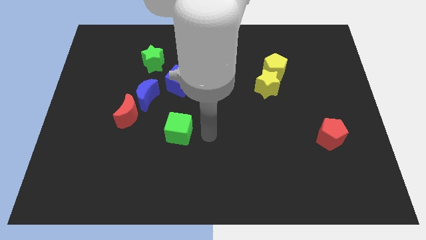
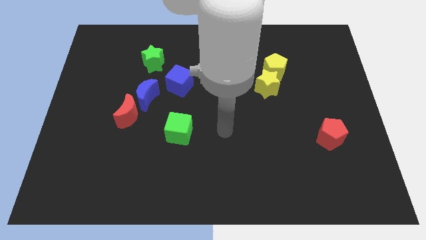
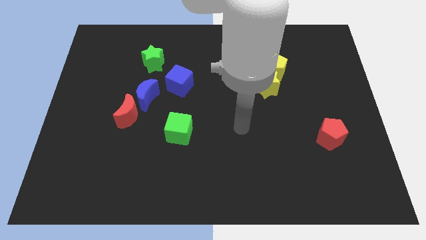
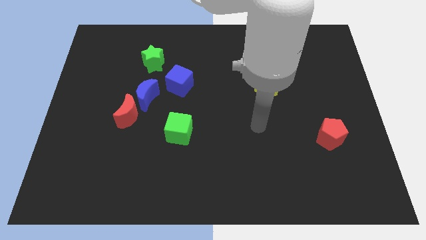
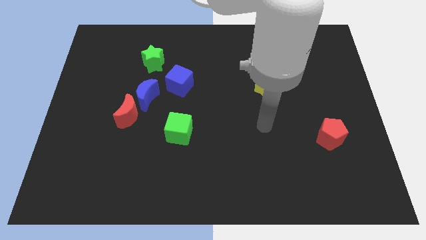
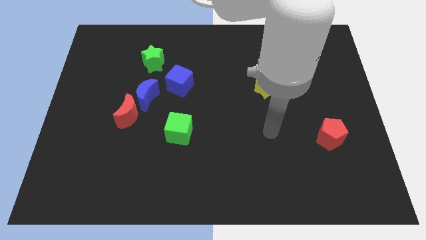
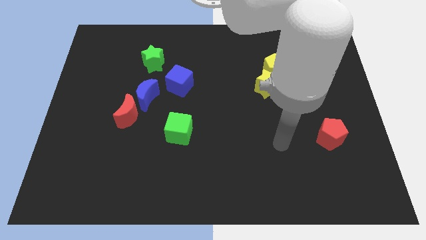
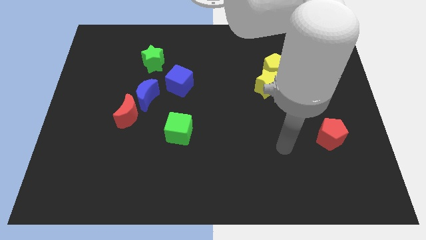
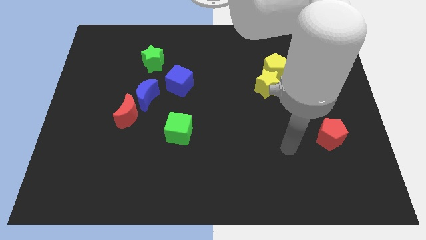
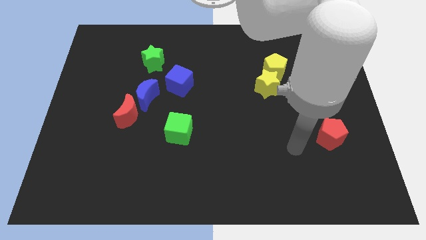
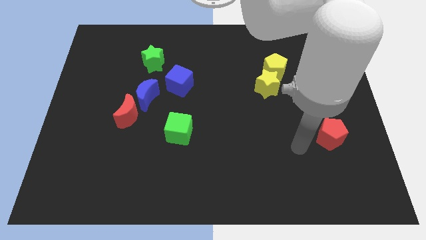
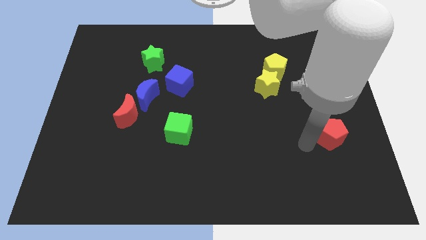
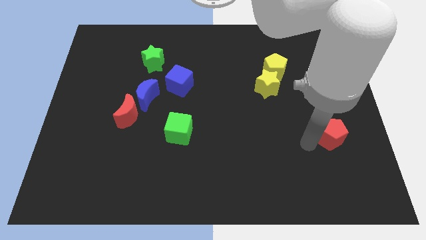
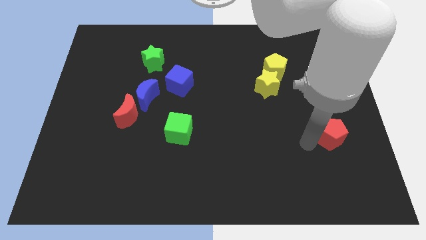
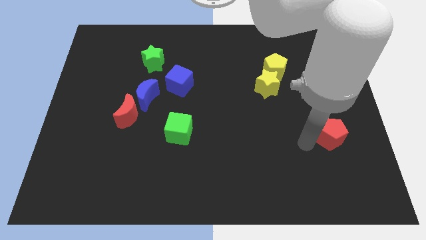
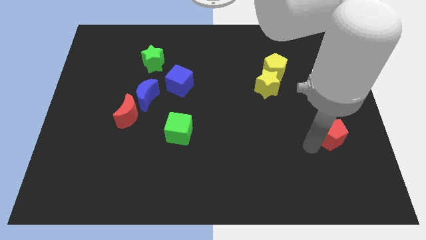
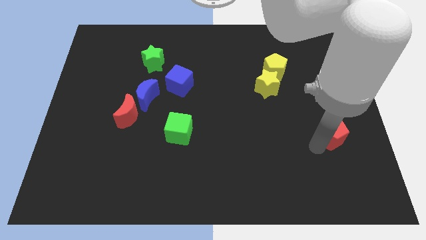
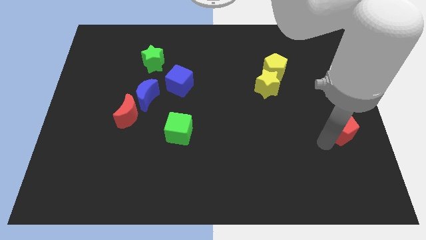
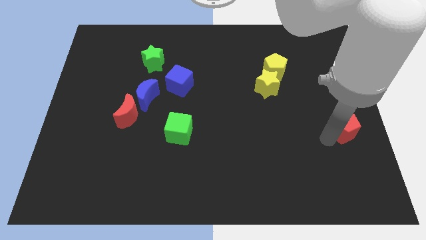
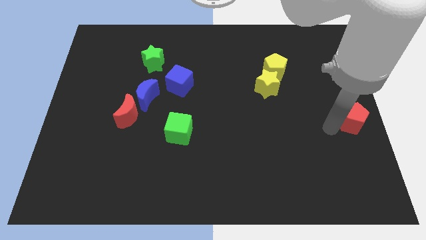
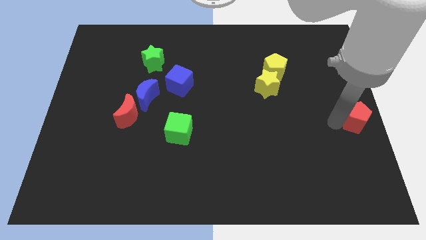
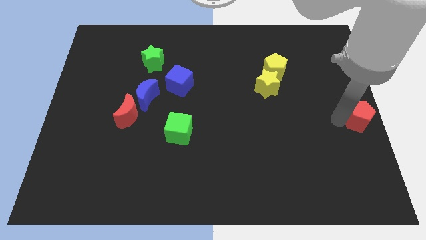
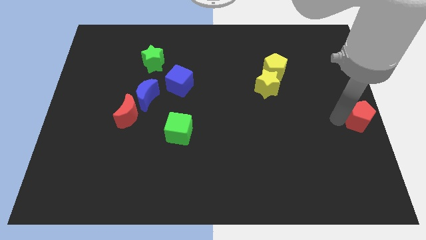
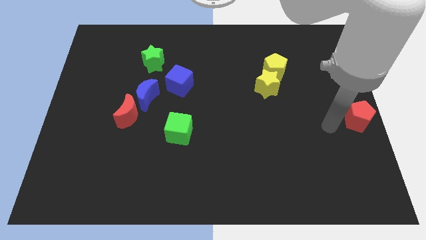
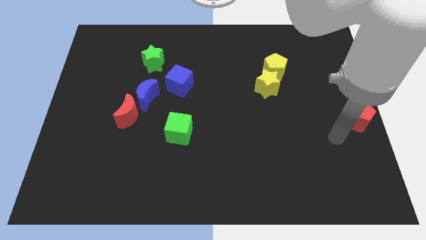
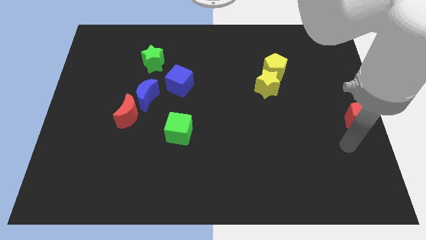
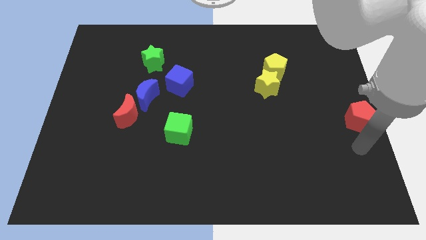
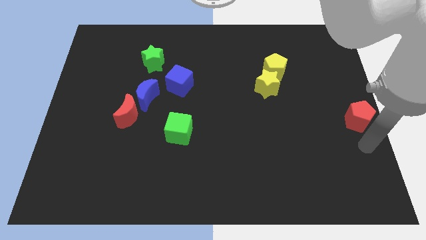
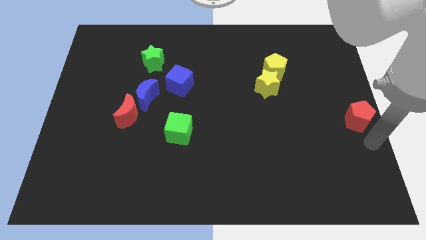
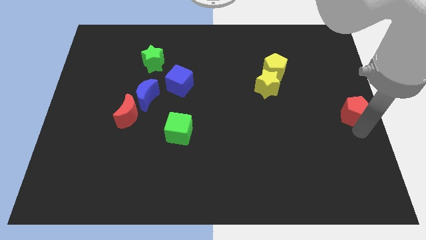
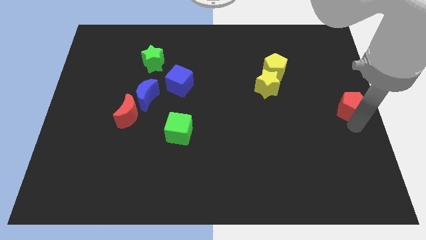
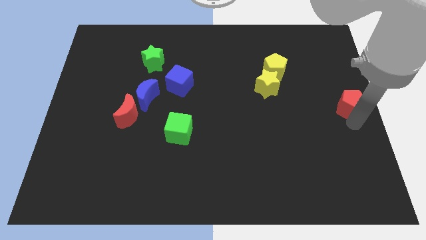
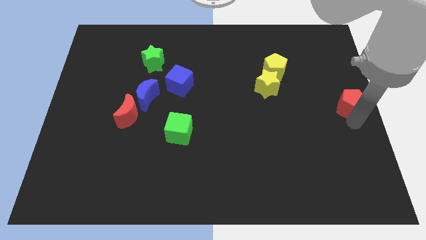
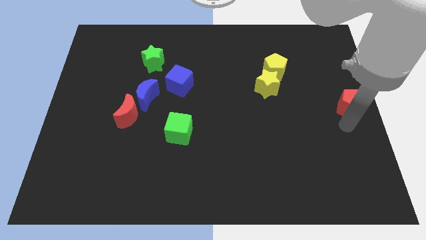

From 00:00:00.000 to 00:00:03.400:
push the red pentagon to the right center of the board

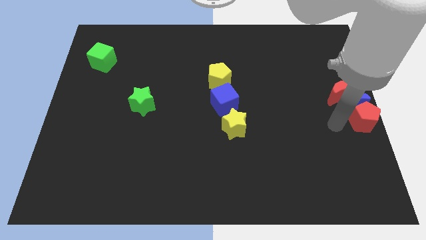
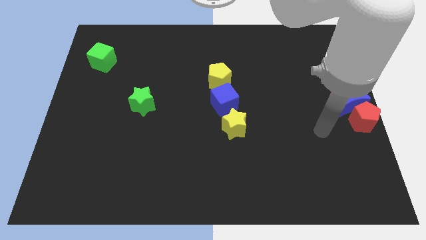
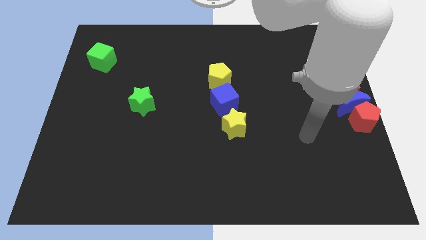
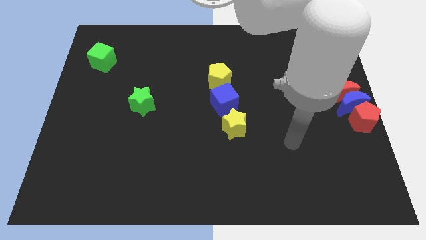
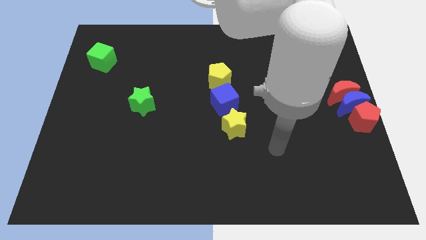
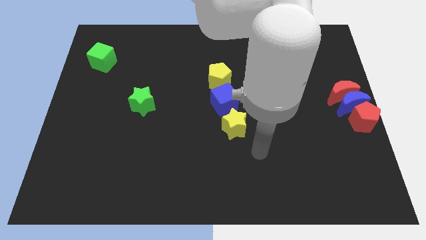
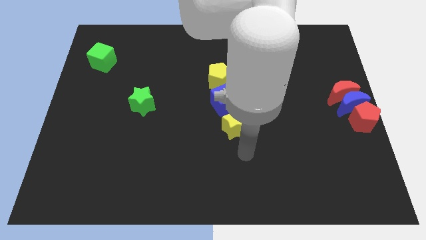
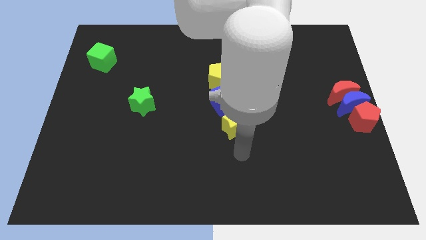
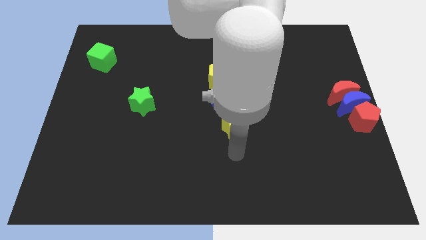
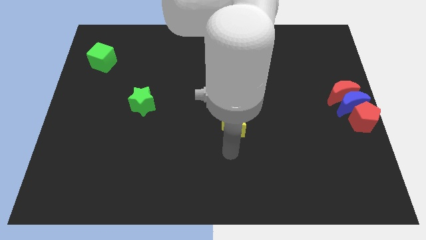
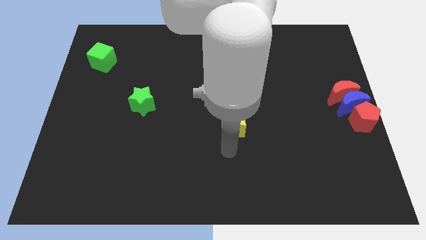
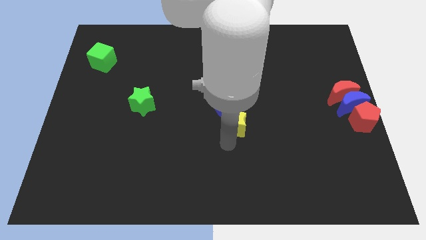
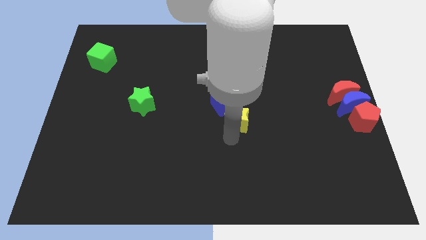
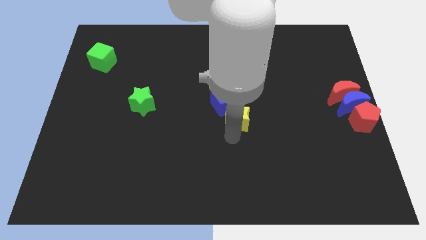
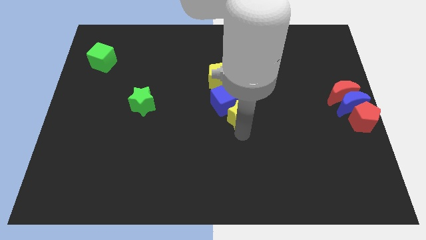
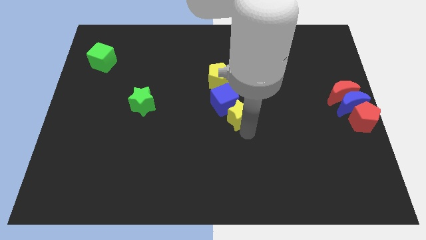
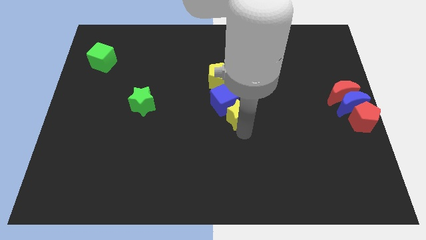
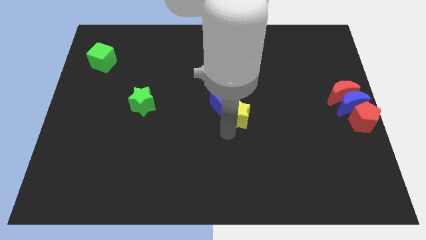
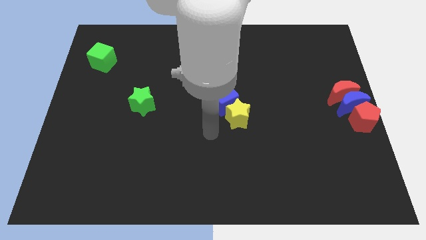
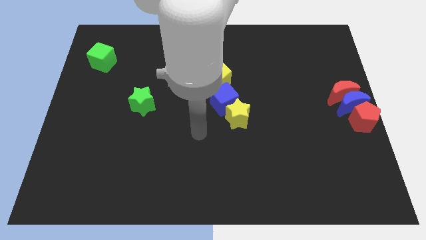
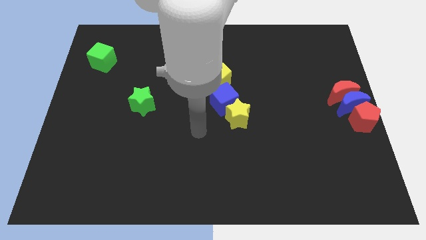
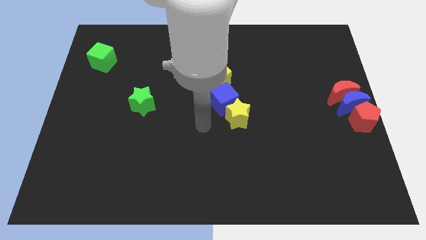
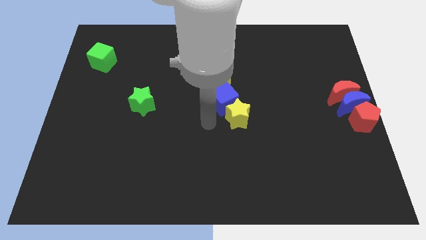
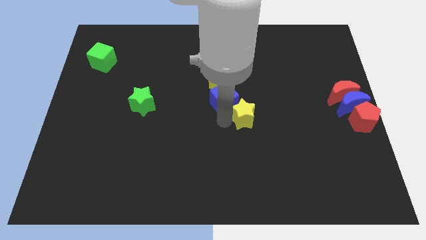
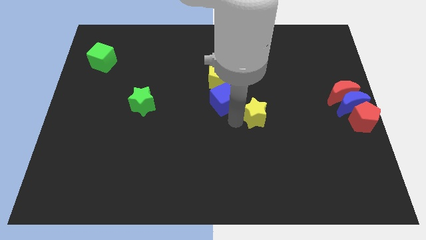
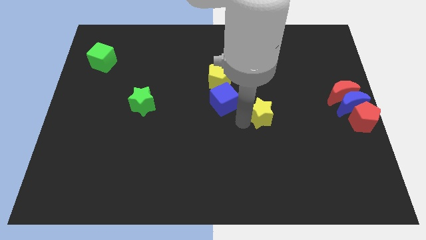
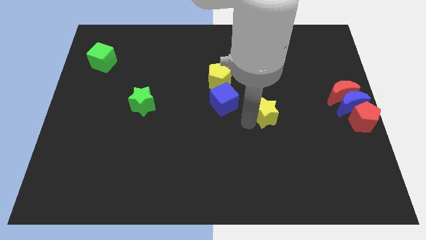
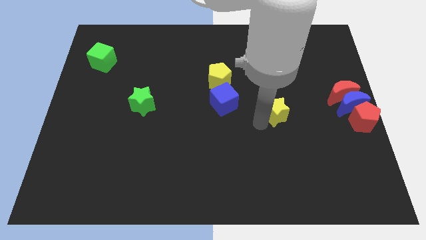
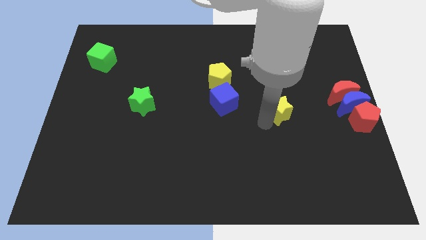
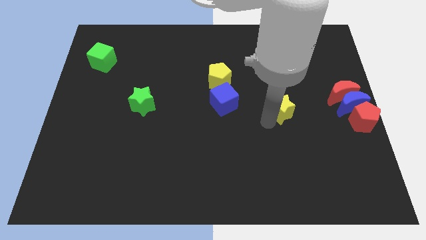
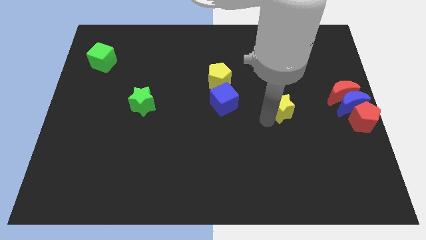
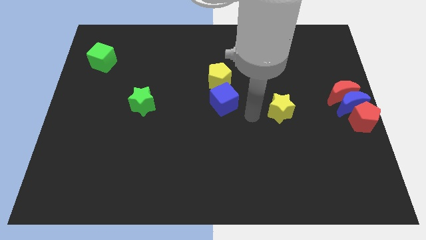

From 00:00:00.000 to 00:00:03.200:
move the yellow star away from the bottom side of the blue cube

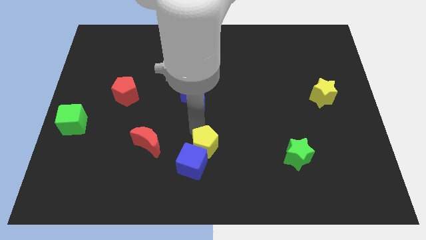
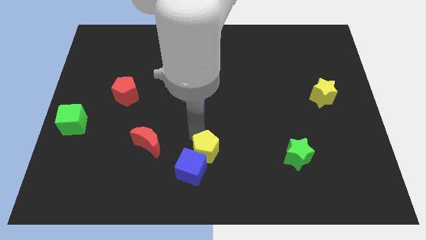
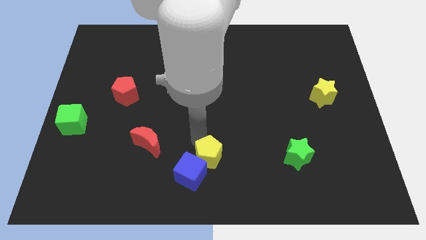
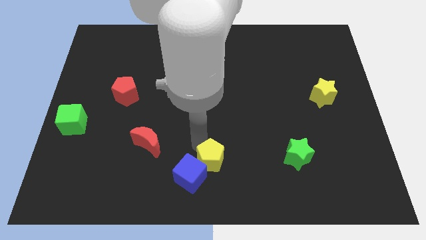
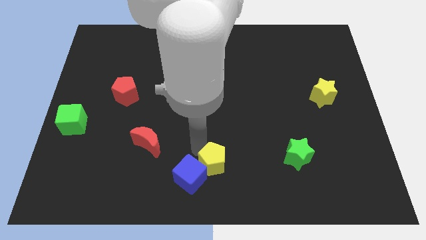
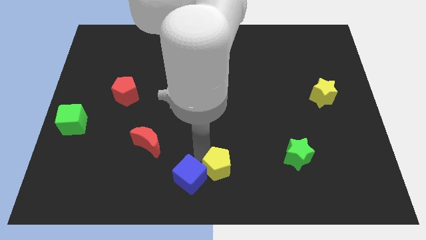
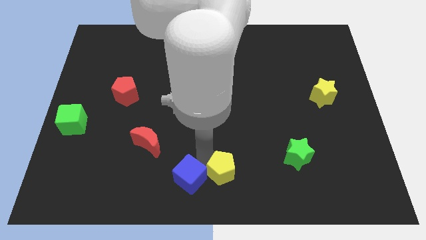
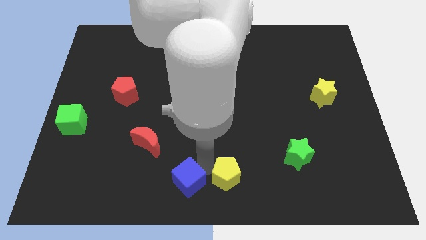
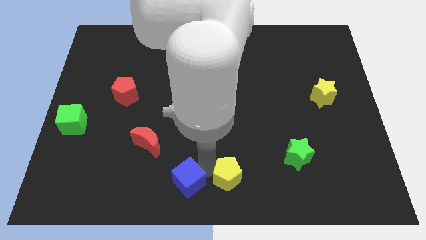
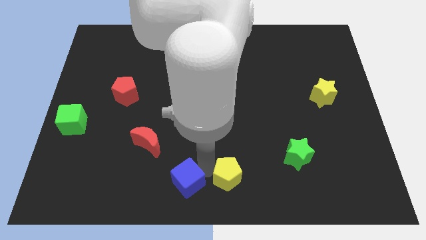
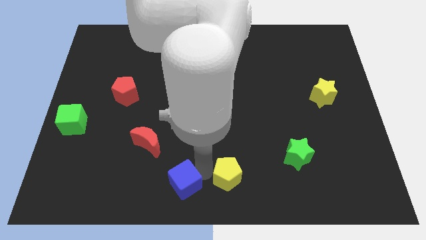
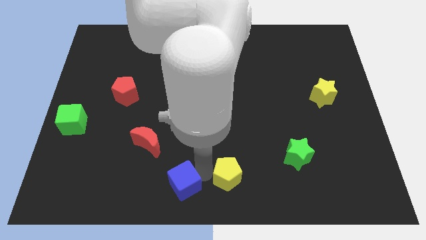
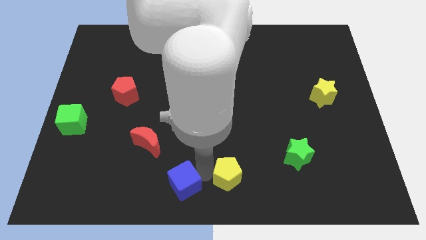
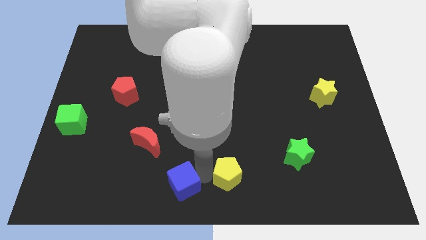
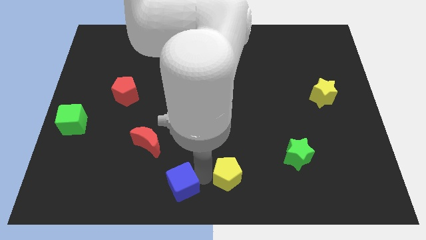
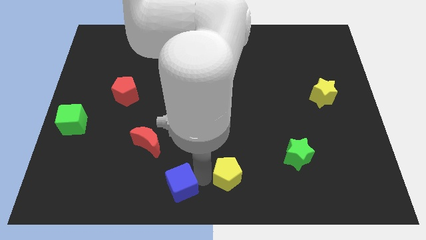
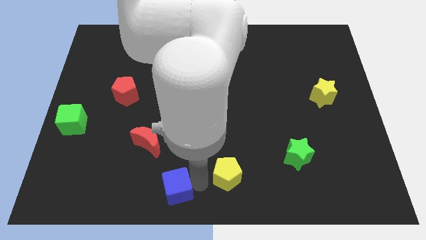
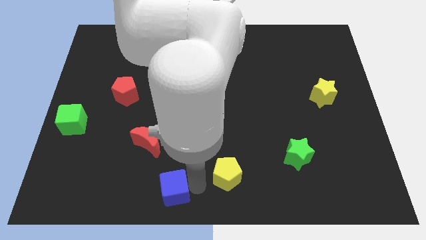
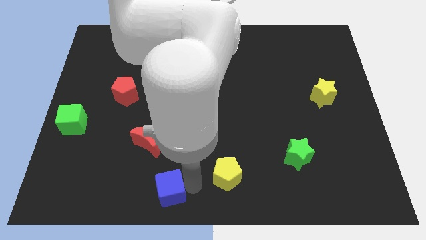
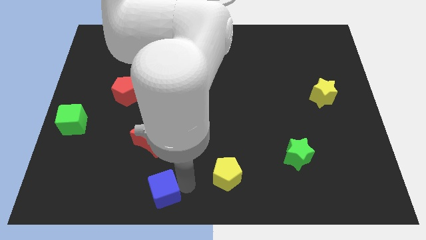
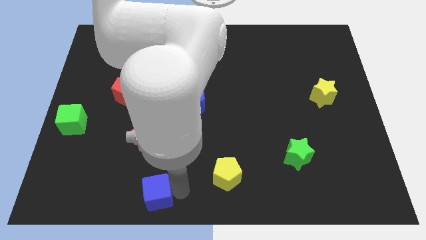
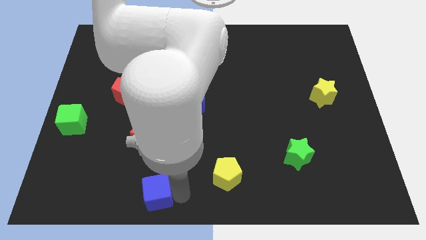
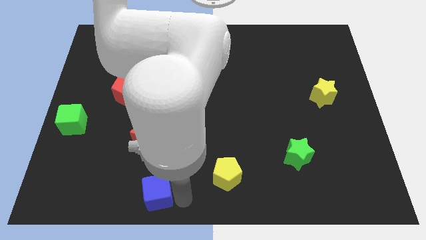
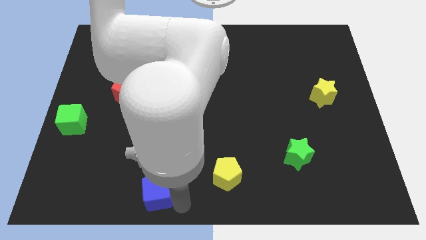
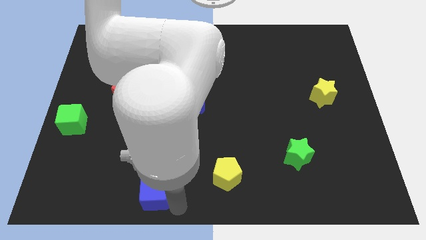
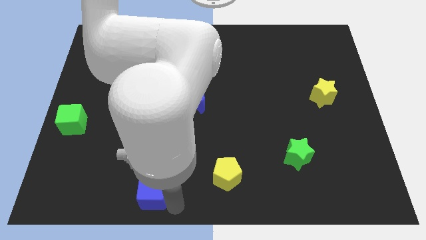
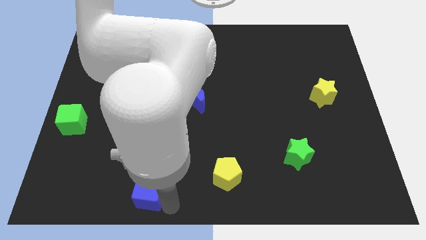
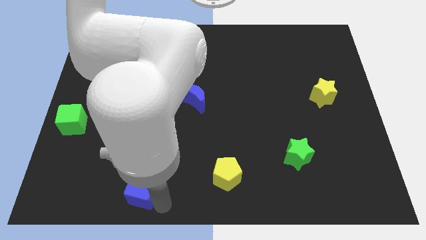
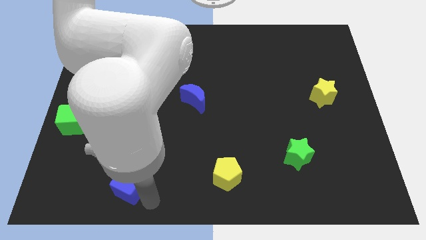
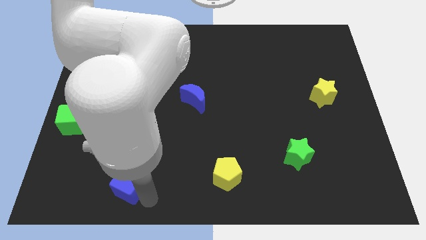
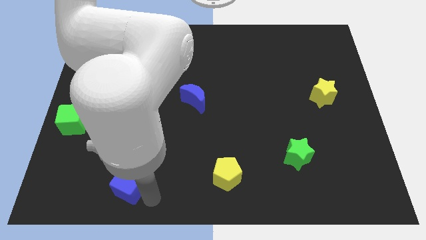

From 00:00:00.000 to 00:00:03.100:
separate blue cube from yellow pentagon
